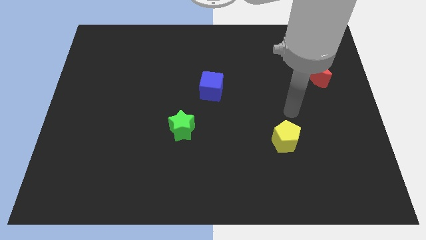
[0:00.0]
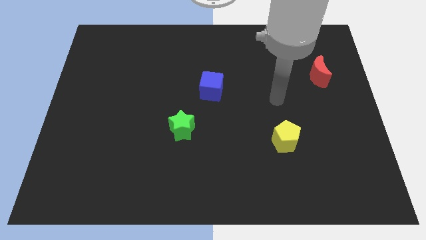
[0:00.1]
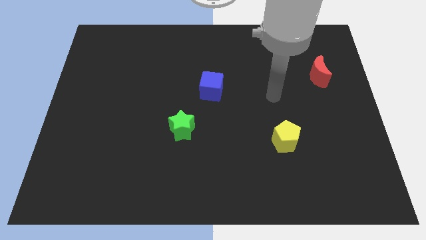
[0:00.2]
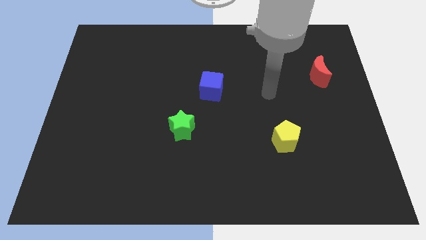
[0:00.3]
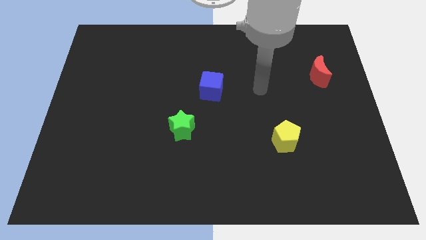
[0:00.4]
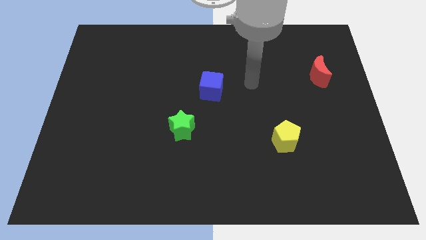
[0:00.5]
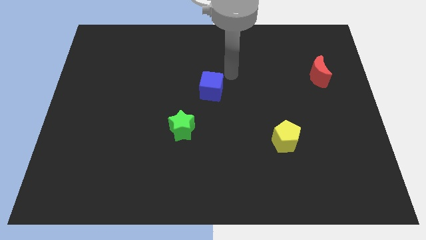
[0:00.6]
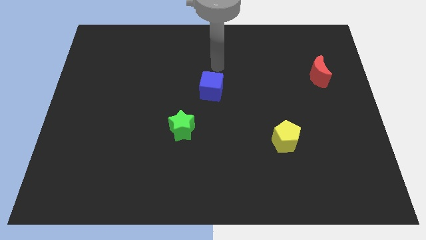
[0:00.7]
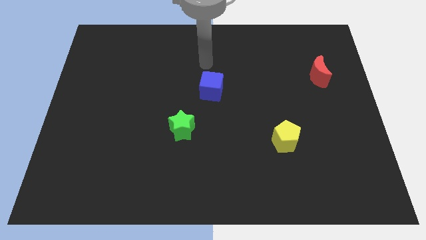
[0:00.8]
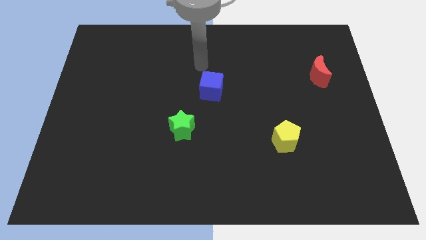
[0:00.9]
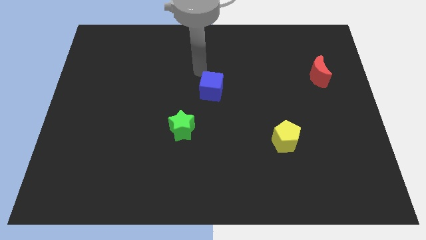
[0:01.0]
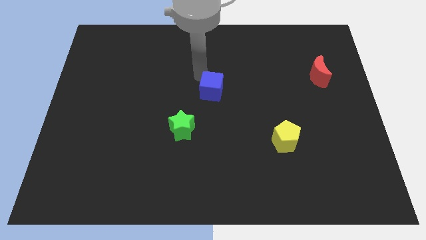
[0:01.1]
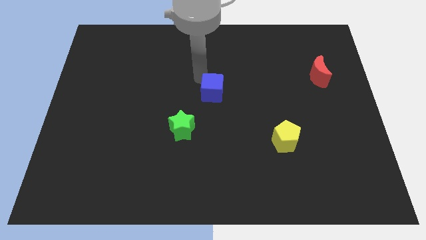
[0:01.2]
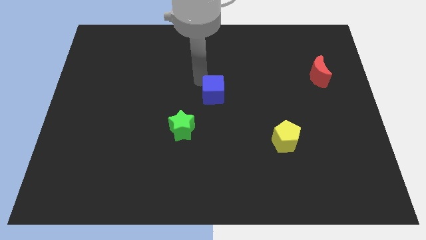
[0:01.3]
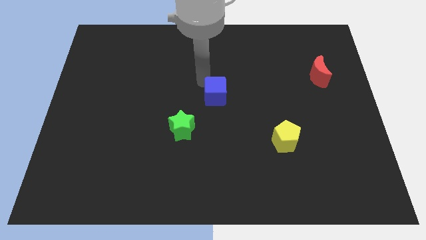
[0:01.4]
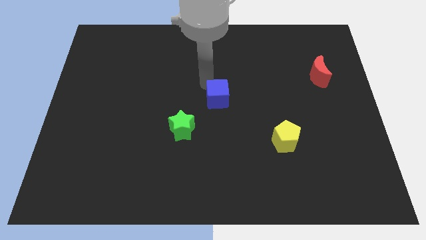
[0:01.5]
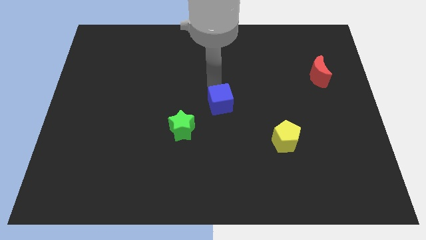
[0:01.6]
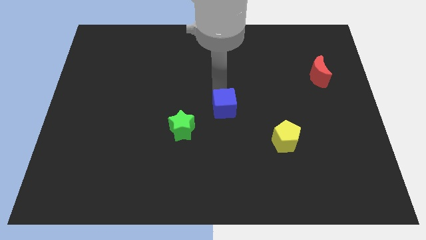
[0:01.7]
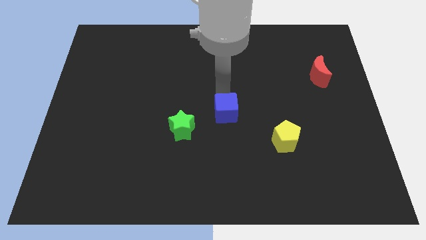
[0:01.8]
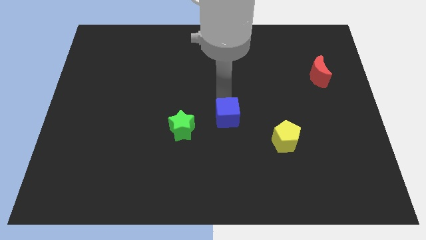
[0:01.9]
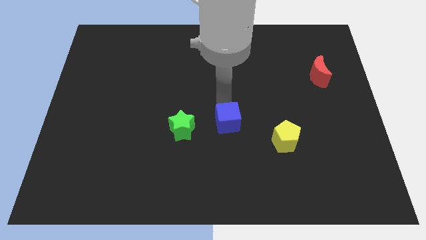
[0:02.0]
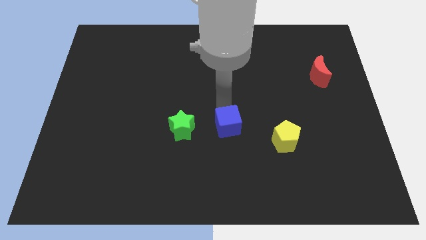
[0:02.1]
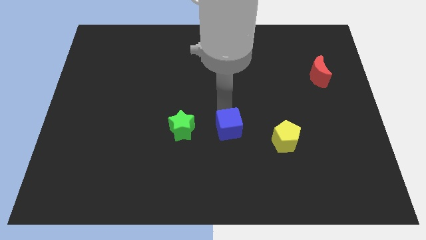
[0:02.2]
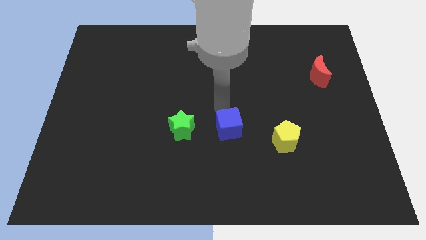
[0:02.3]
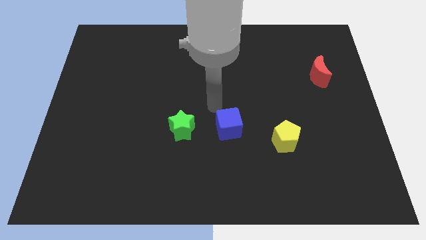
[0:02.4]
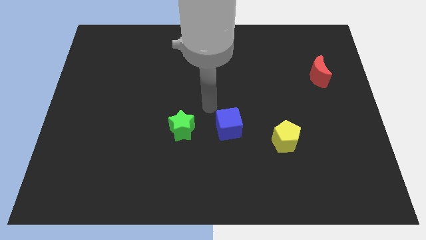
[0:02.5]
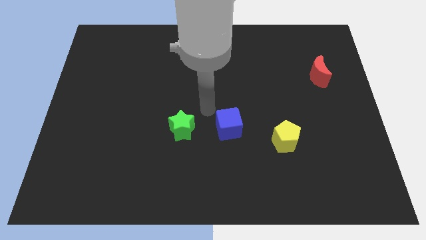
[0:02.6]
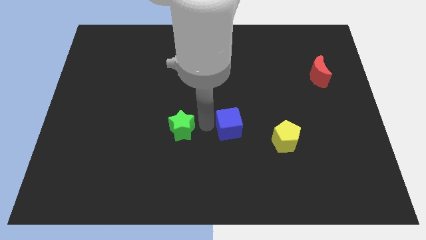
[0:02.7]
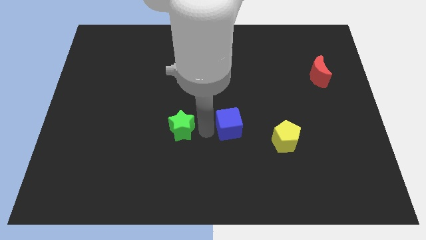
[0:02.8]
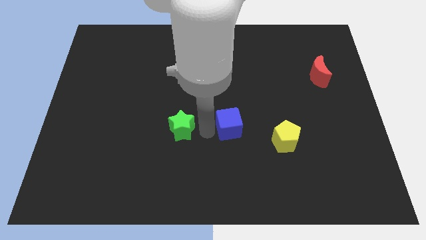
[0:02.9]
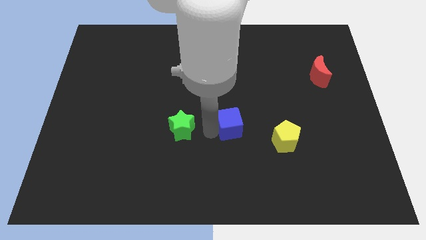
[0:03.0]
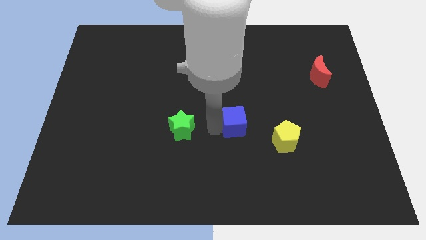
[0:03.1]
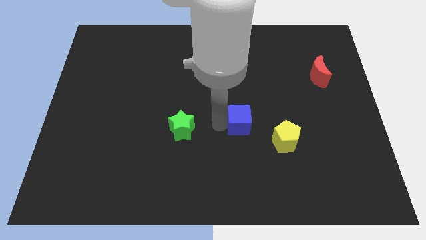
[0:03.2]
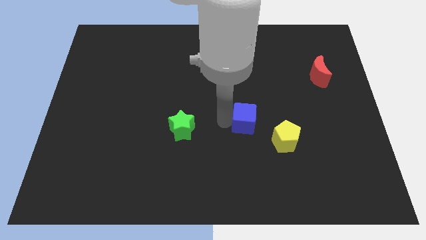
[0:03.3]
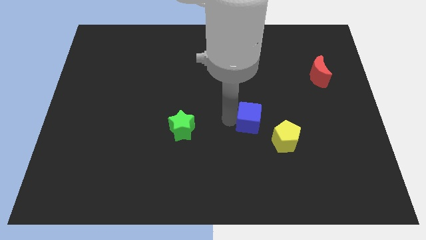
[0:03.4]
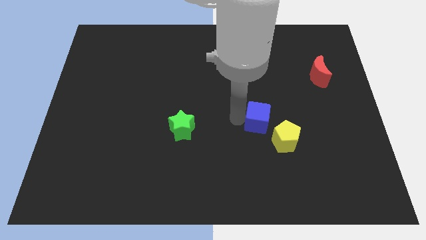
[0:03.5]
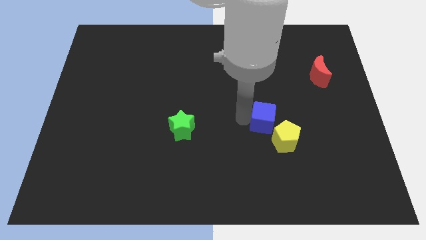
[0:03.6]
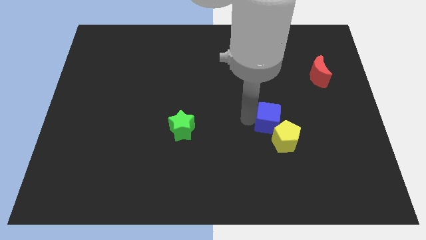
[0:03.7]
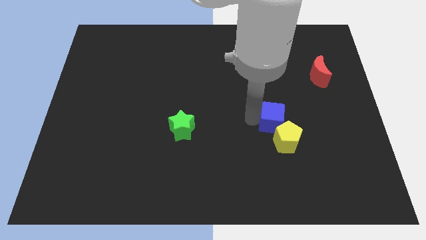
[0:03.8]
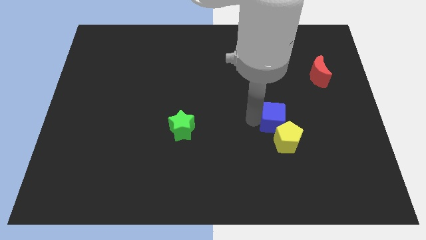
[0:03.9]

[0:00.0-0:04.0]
slide the cube to the yellow block

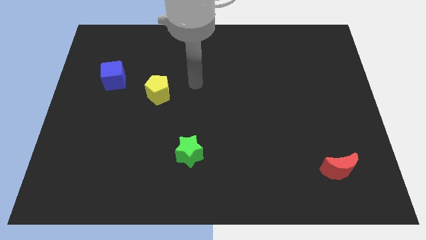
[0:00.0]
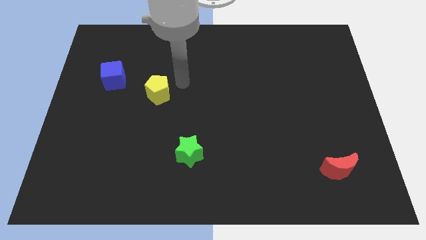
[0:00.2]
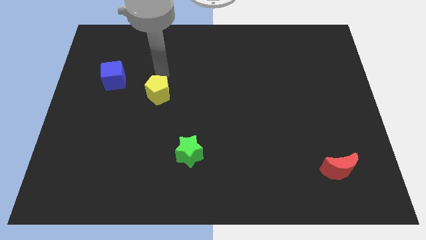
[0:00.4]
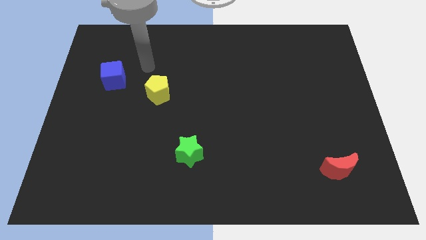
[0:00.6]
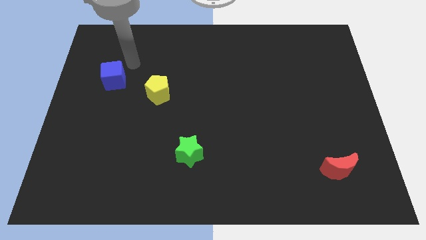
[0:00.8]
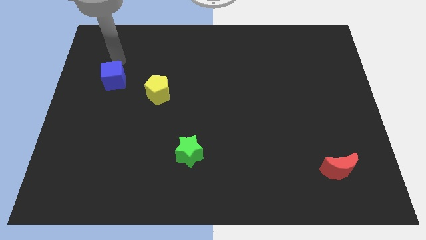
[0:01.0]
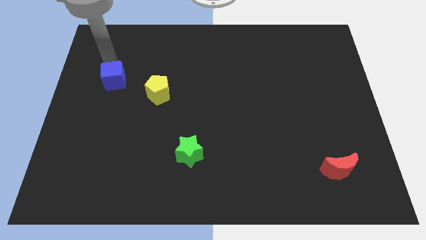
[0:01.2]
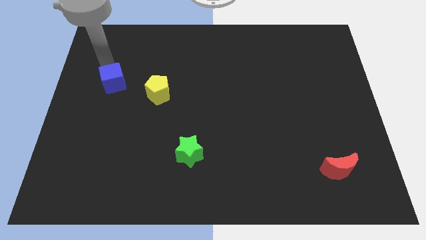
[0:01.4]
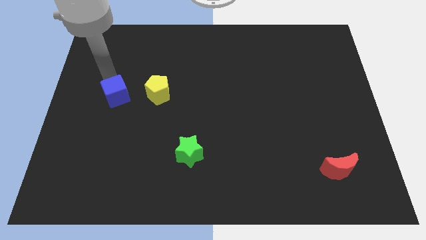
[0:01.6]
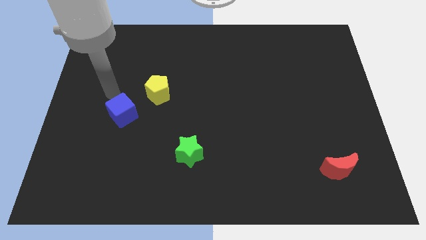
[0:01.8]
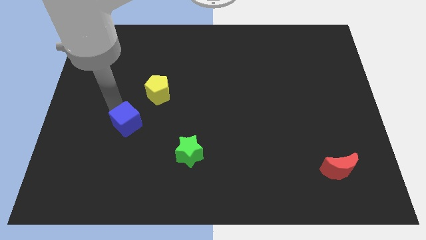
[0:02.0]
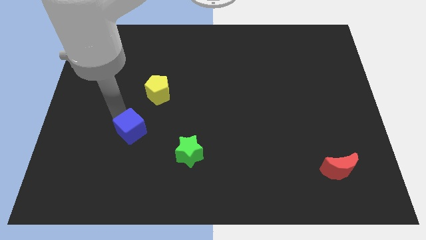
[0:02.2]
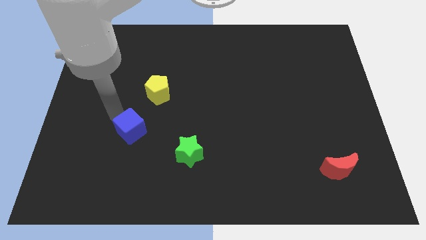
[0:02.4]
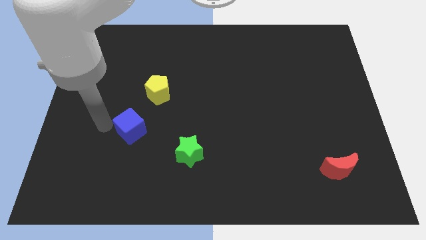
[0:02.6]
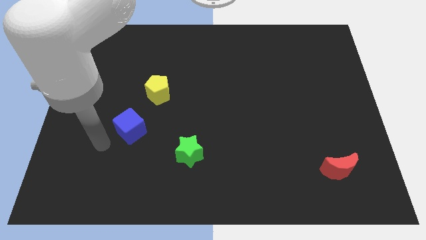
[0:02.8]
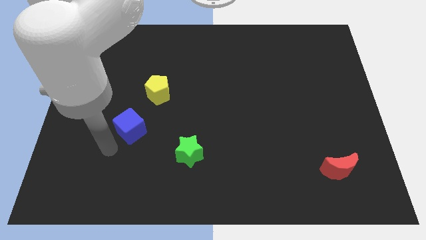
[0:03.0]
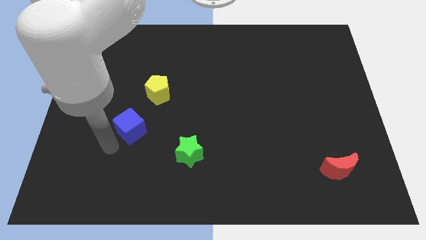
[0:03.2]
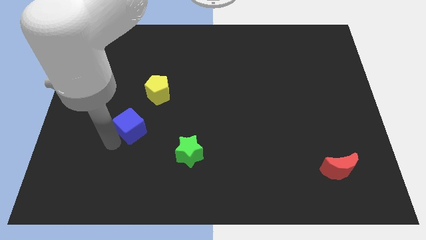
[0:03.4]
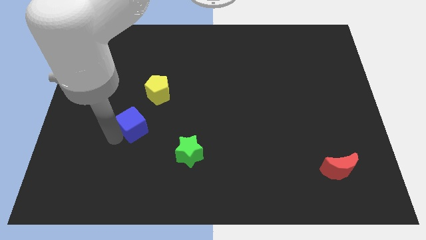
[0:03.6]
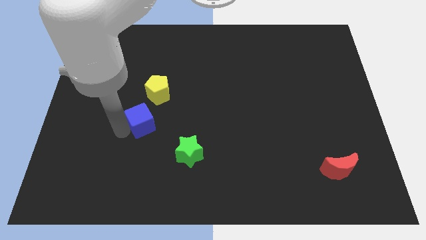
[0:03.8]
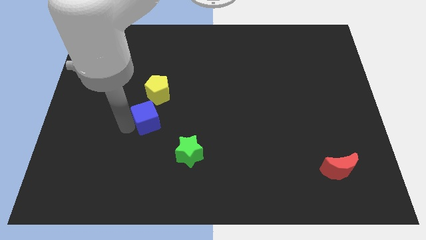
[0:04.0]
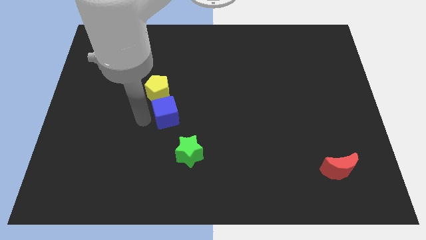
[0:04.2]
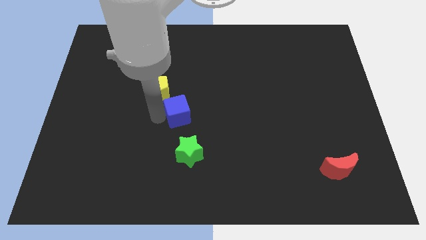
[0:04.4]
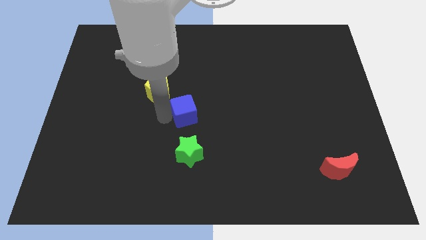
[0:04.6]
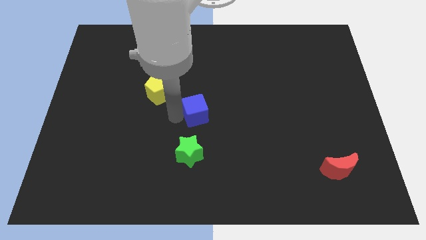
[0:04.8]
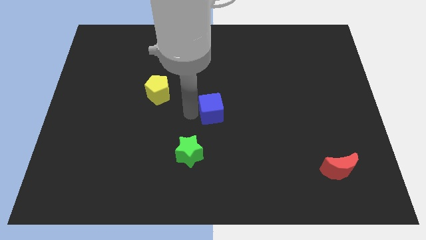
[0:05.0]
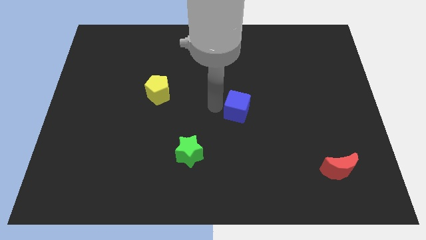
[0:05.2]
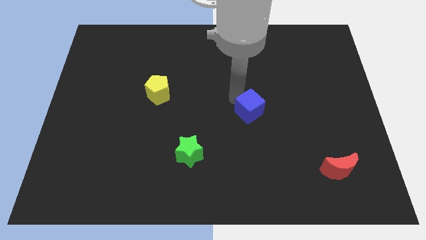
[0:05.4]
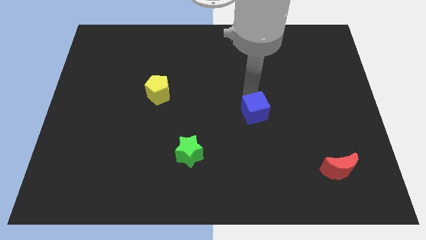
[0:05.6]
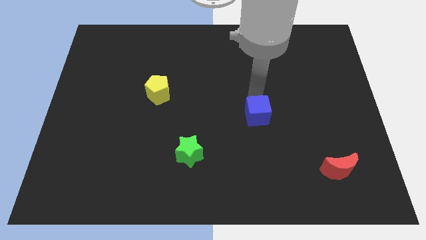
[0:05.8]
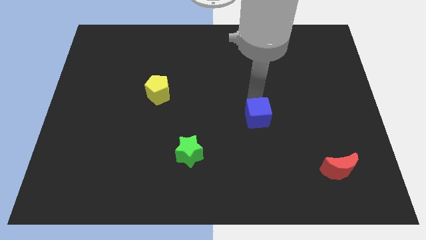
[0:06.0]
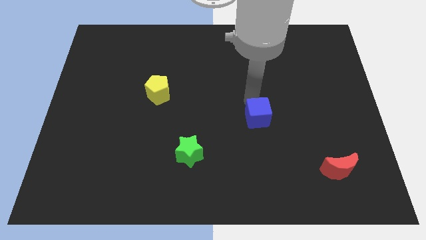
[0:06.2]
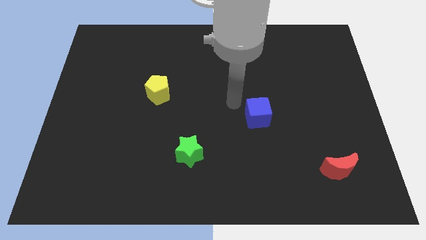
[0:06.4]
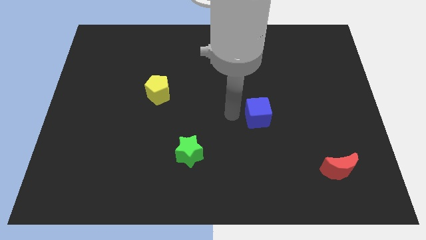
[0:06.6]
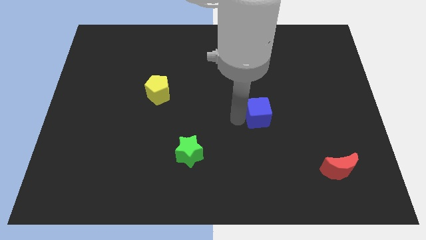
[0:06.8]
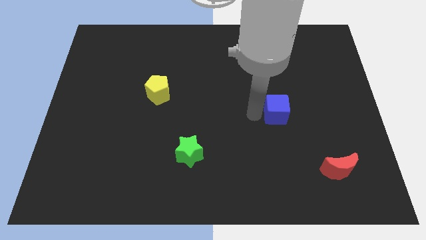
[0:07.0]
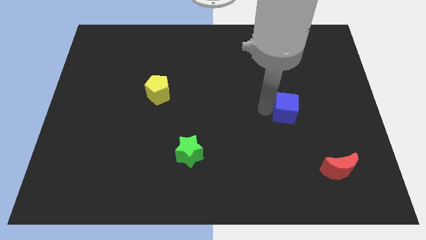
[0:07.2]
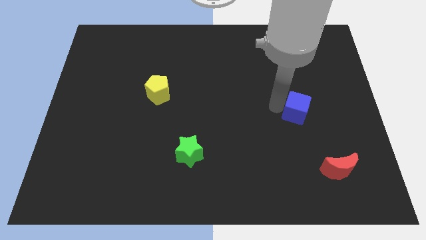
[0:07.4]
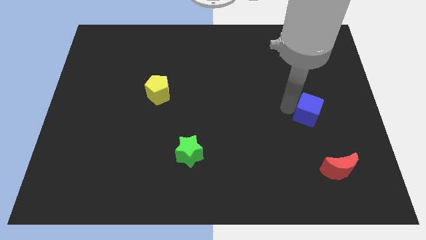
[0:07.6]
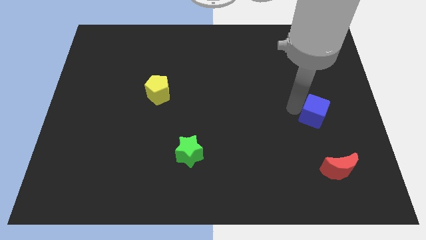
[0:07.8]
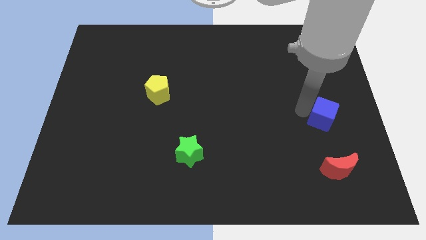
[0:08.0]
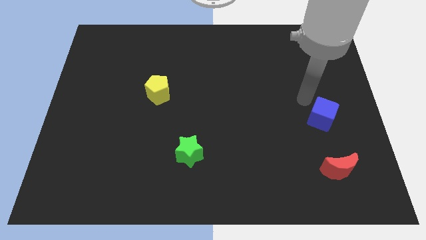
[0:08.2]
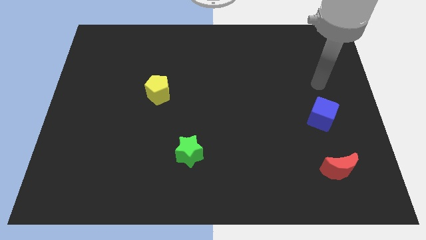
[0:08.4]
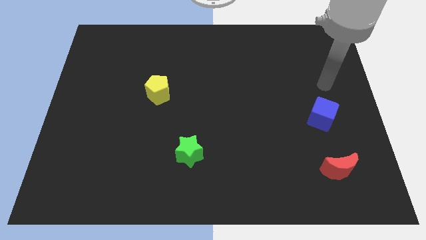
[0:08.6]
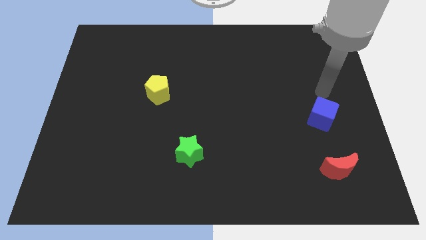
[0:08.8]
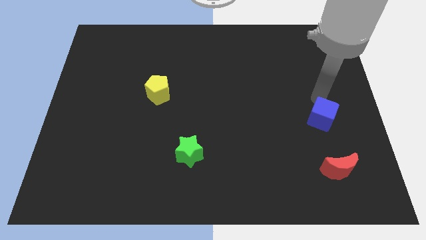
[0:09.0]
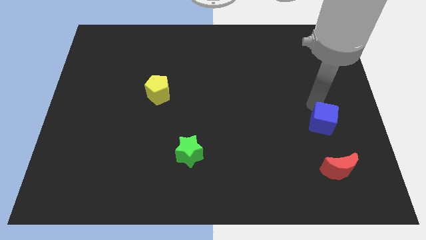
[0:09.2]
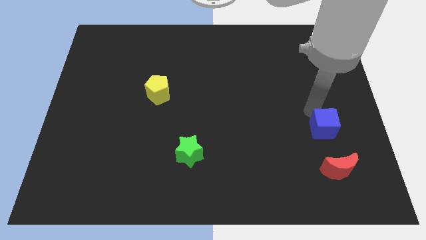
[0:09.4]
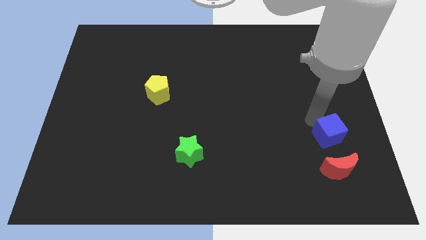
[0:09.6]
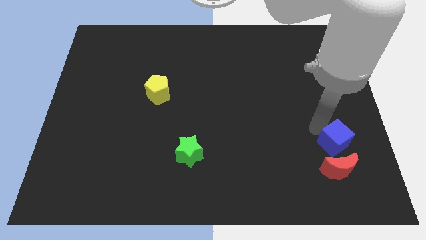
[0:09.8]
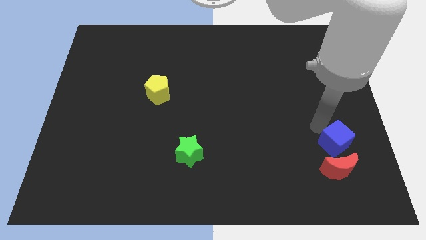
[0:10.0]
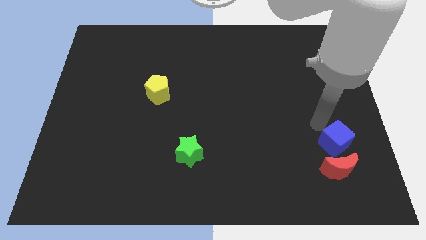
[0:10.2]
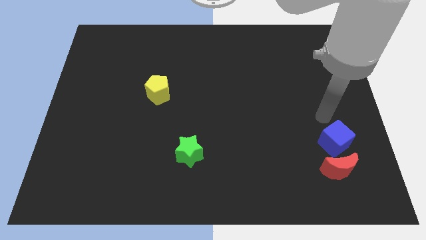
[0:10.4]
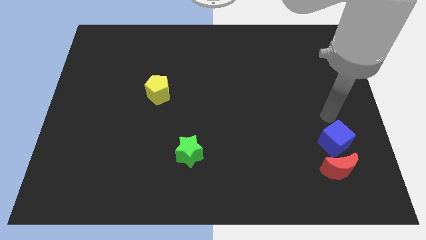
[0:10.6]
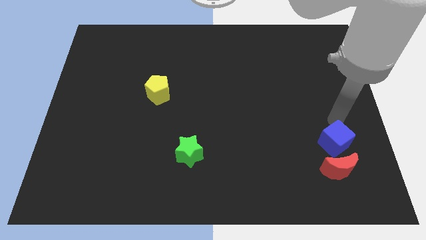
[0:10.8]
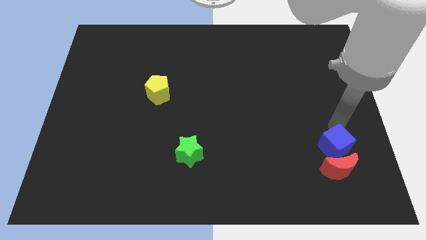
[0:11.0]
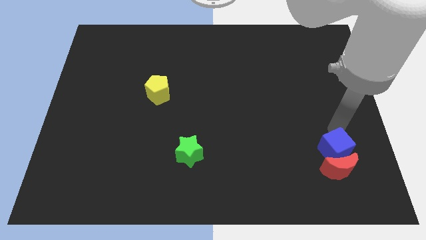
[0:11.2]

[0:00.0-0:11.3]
push the blue block close to the red moon
